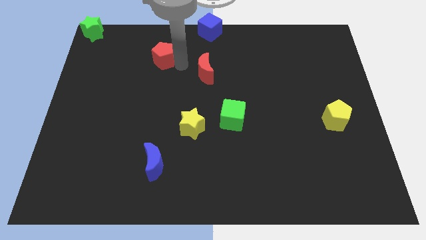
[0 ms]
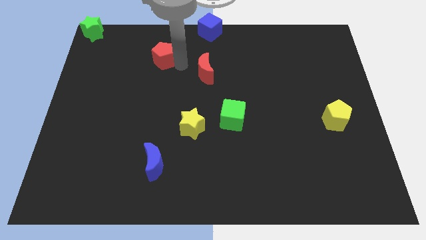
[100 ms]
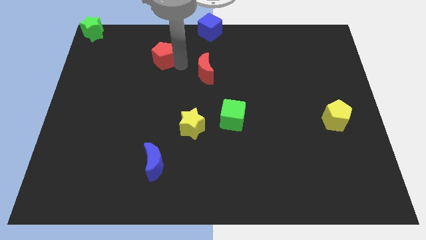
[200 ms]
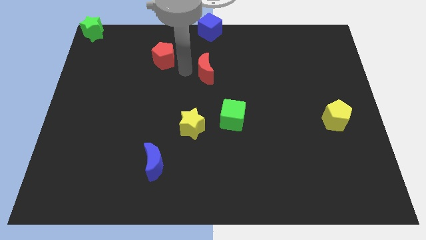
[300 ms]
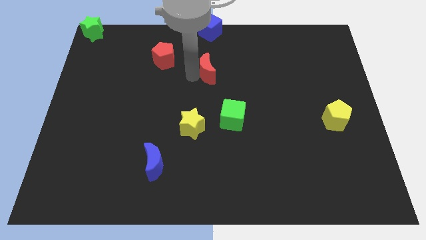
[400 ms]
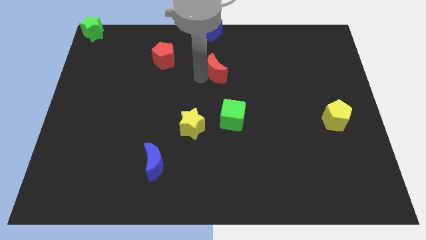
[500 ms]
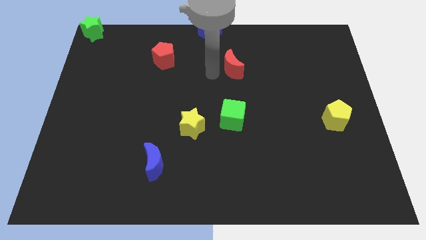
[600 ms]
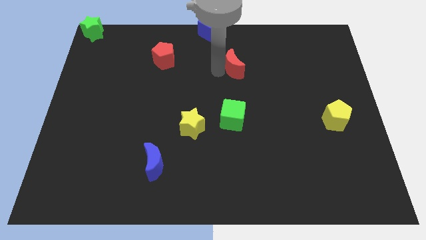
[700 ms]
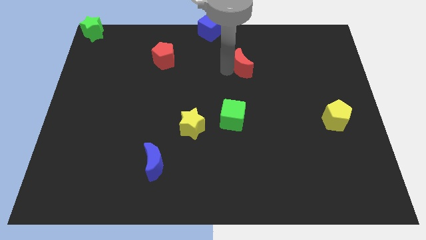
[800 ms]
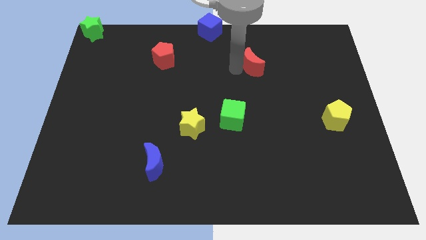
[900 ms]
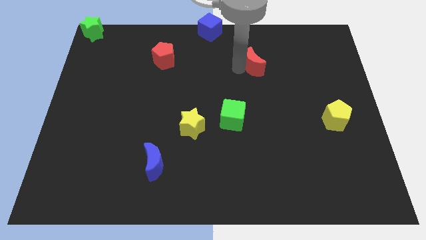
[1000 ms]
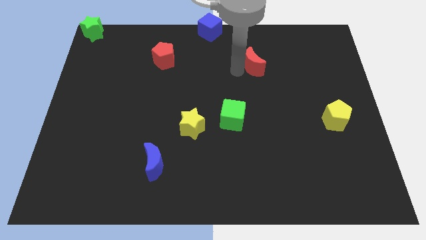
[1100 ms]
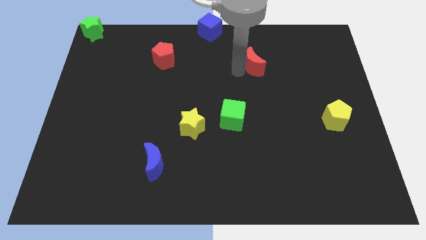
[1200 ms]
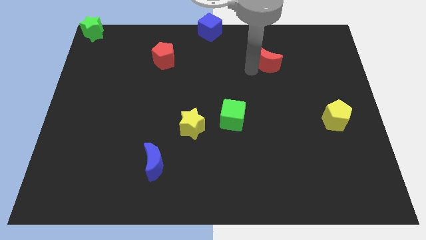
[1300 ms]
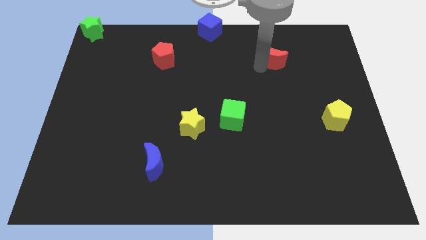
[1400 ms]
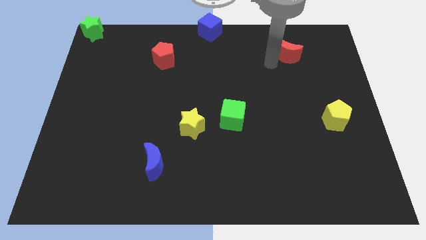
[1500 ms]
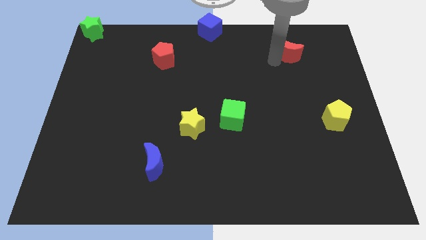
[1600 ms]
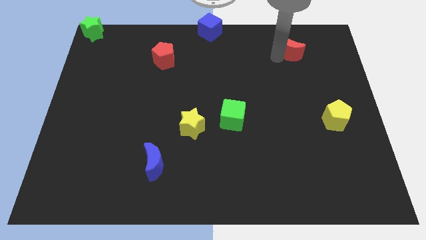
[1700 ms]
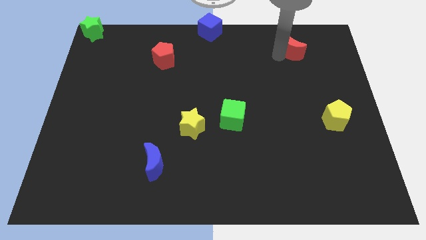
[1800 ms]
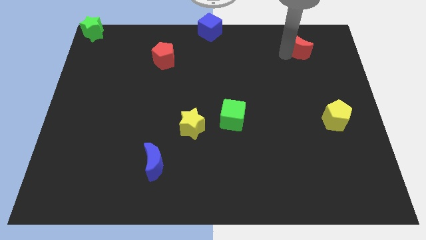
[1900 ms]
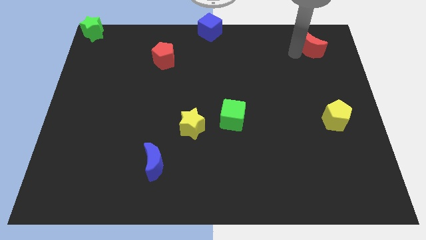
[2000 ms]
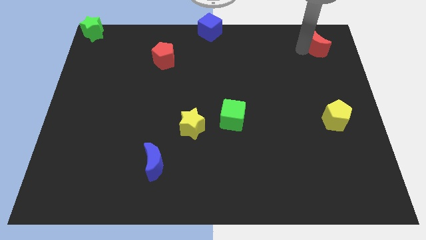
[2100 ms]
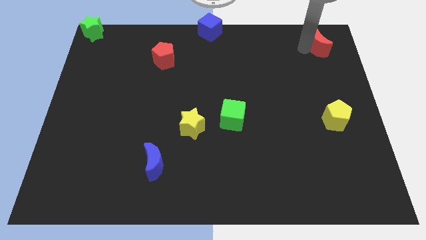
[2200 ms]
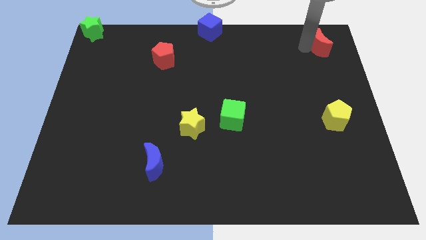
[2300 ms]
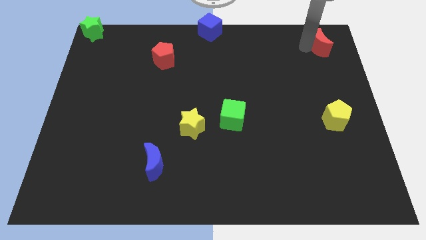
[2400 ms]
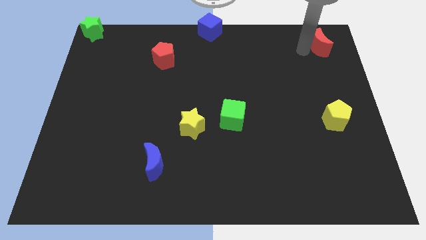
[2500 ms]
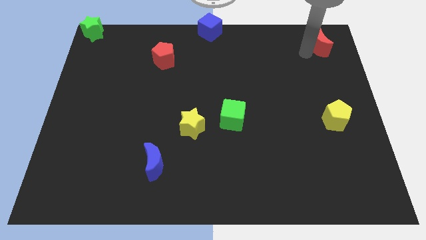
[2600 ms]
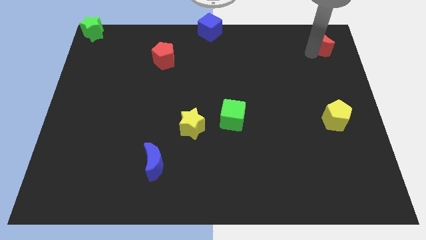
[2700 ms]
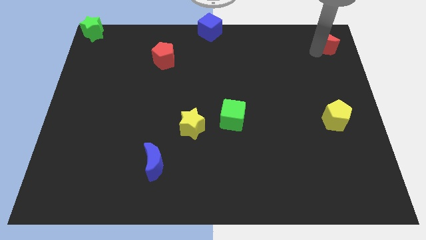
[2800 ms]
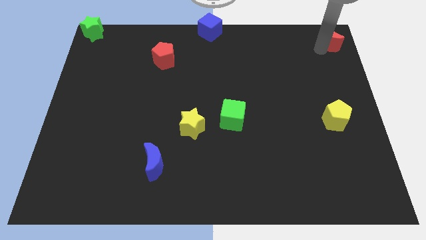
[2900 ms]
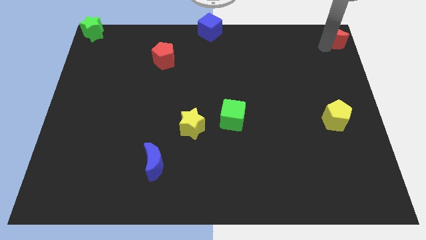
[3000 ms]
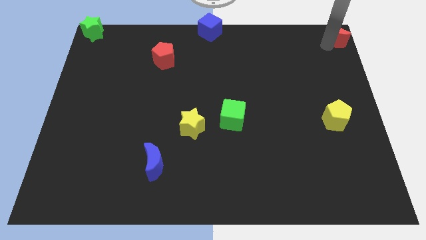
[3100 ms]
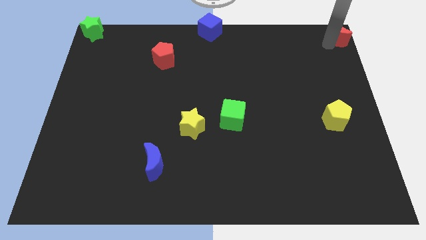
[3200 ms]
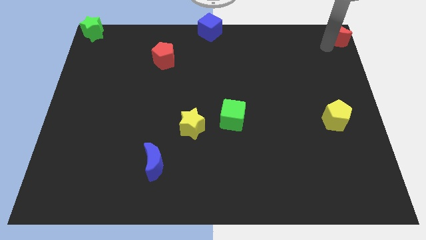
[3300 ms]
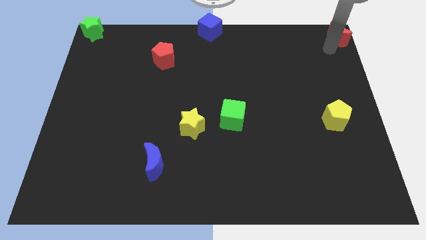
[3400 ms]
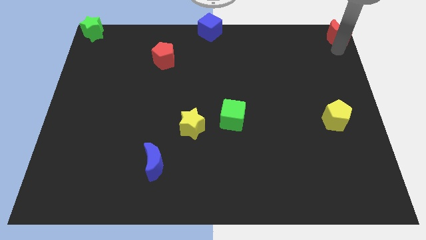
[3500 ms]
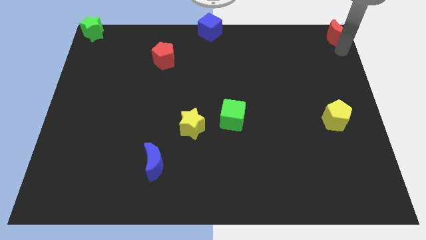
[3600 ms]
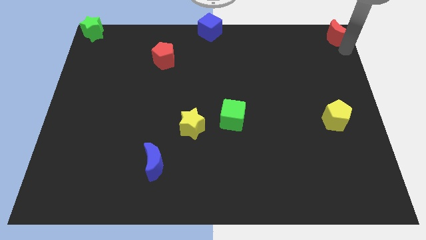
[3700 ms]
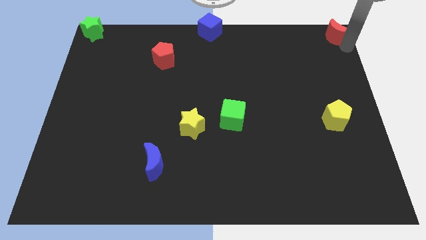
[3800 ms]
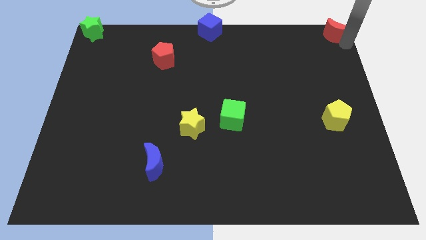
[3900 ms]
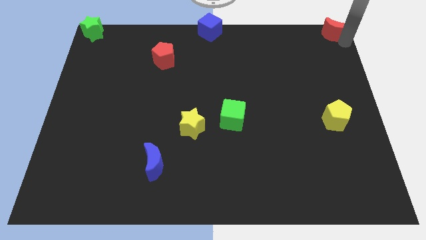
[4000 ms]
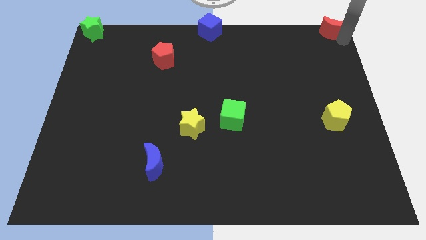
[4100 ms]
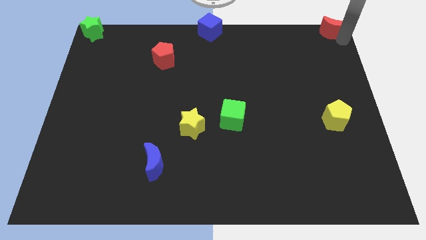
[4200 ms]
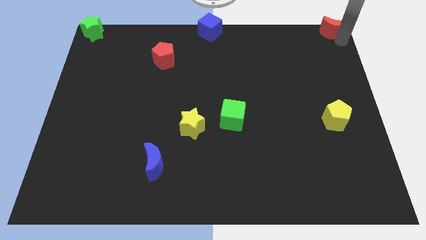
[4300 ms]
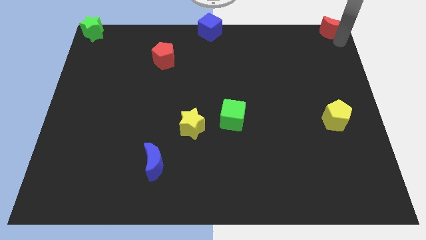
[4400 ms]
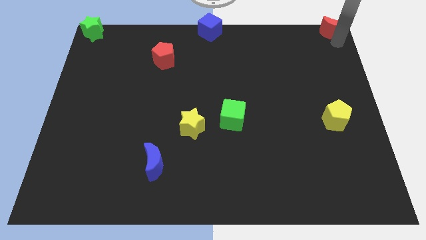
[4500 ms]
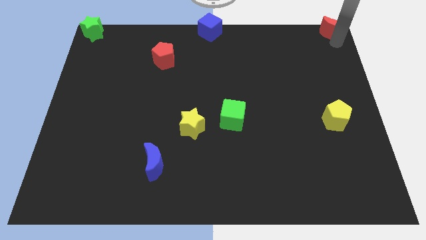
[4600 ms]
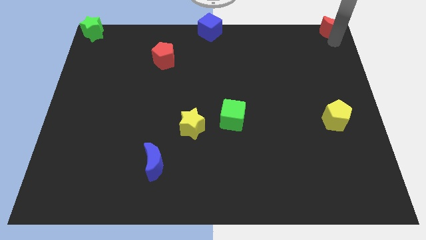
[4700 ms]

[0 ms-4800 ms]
push the red moon to the top right corner

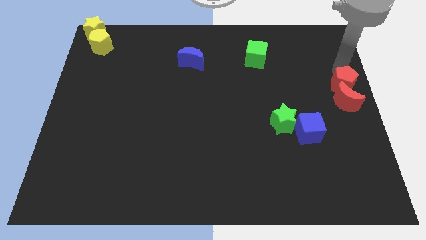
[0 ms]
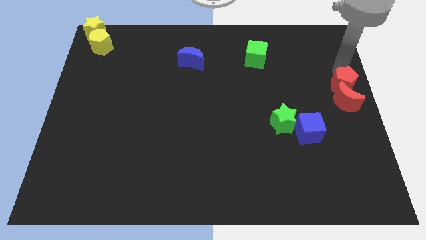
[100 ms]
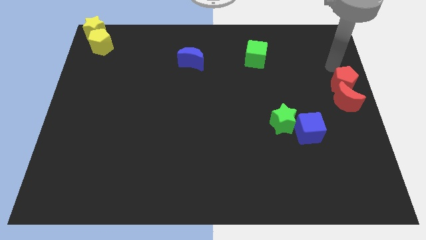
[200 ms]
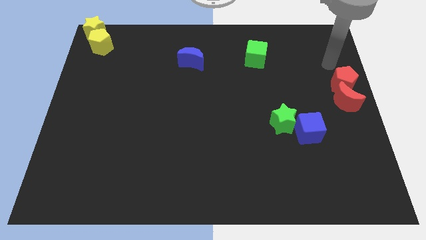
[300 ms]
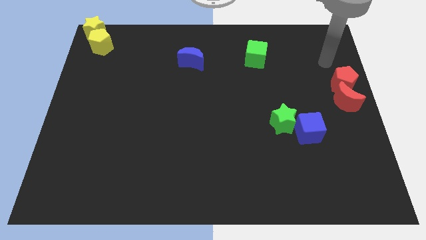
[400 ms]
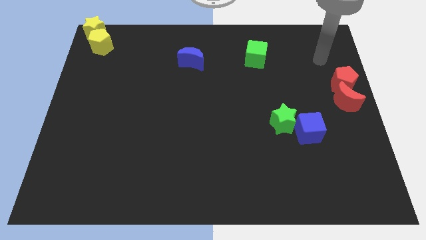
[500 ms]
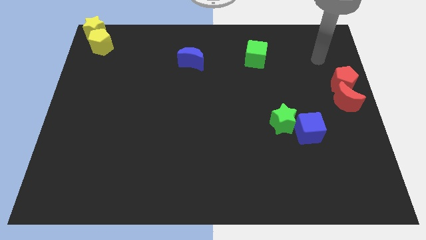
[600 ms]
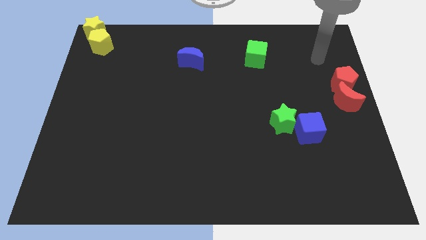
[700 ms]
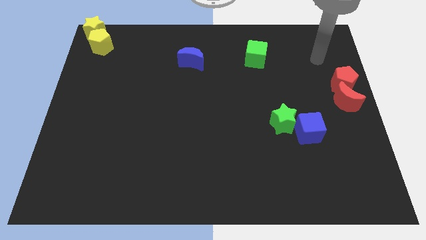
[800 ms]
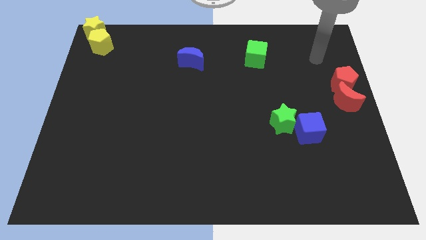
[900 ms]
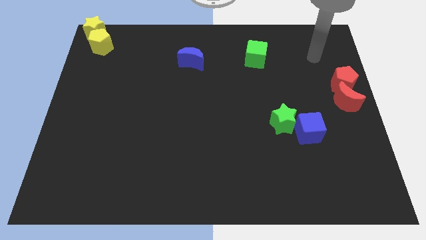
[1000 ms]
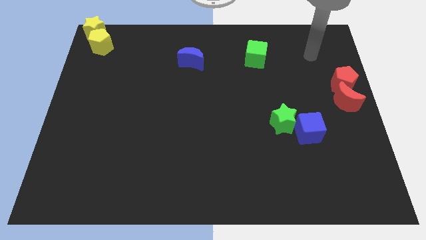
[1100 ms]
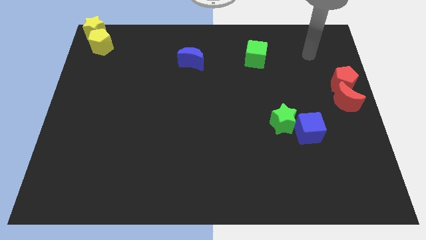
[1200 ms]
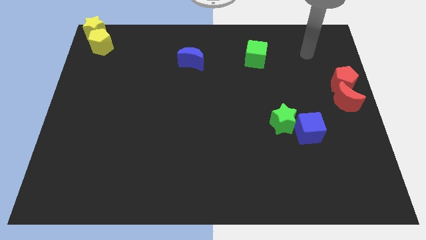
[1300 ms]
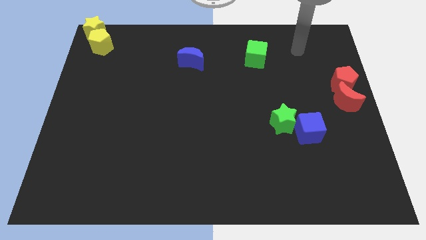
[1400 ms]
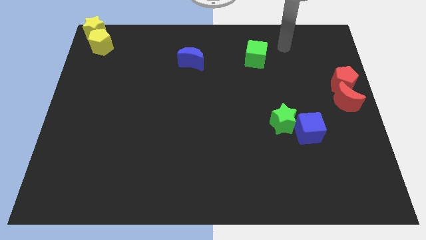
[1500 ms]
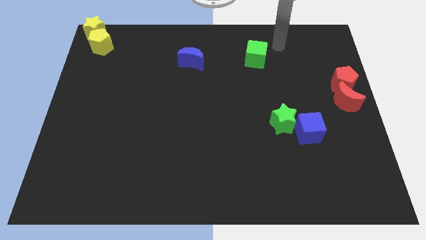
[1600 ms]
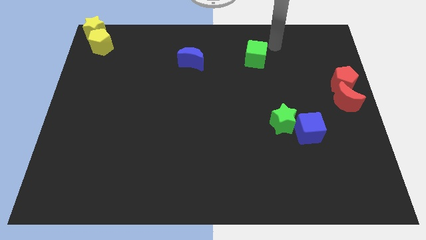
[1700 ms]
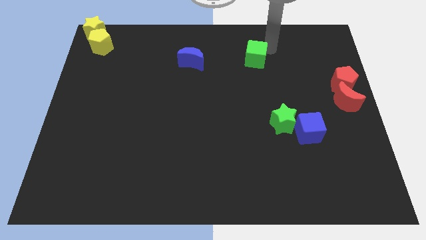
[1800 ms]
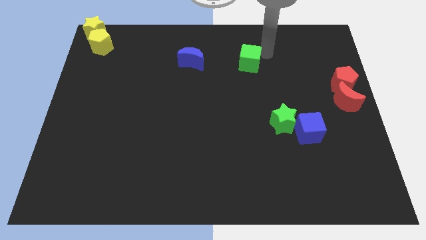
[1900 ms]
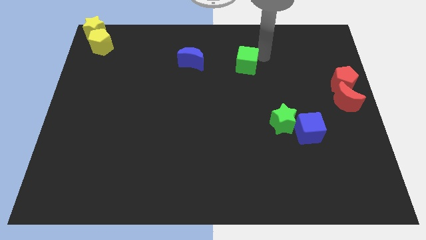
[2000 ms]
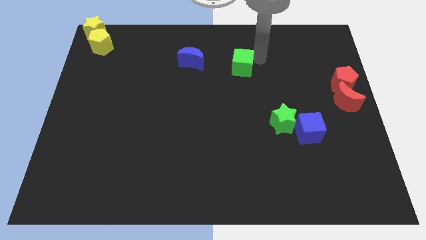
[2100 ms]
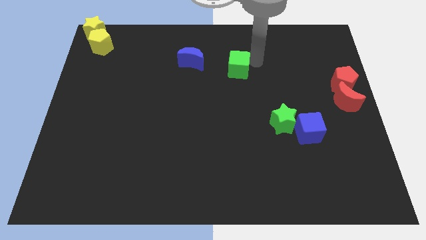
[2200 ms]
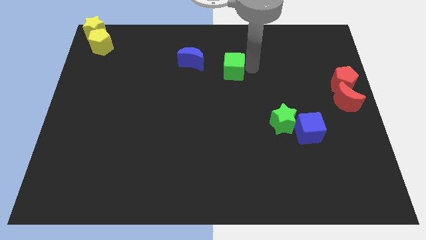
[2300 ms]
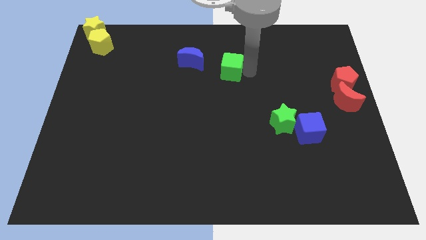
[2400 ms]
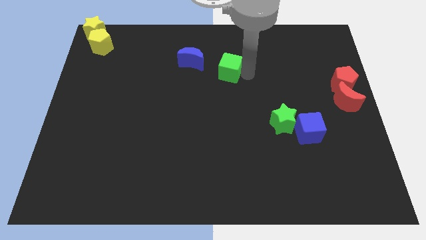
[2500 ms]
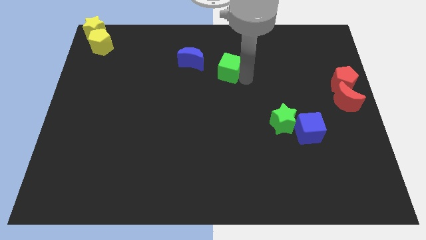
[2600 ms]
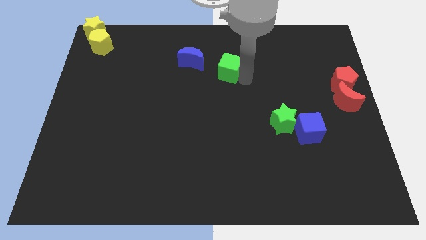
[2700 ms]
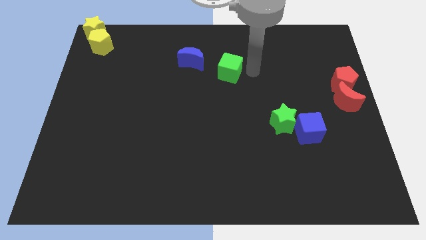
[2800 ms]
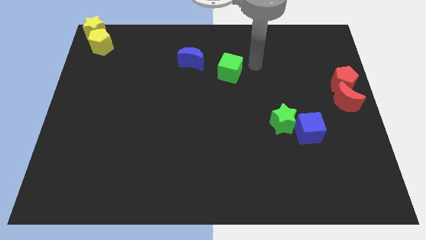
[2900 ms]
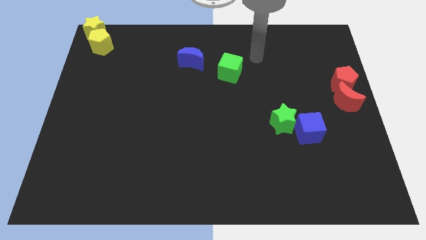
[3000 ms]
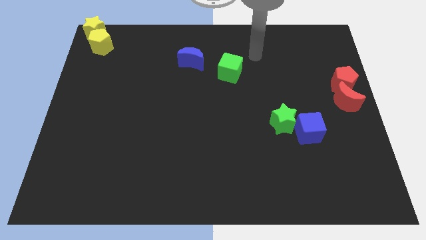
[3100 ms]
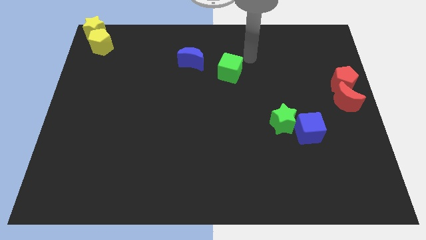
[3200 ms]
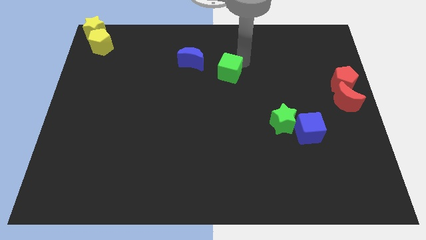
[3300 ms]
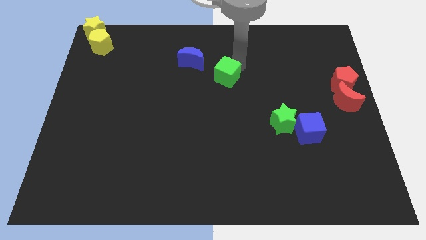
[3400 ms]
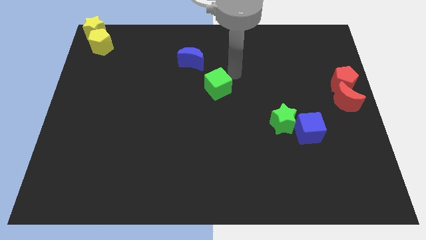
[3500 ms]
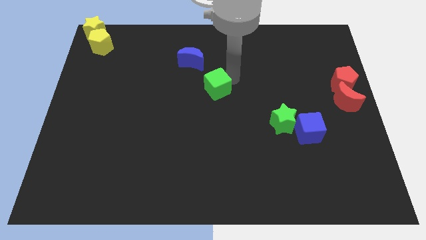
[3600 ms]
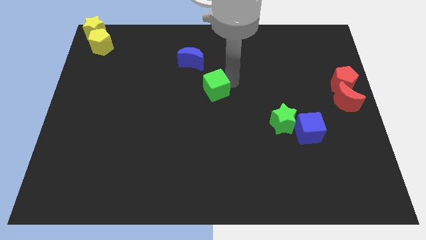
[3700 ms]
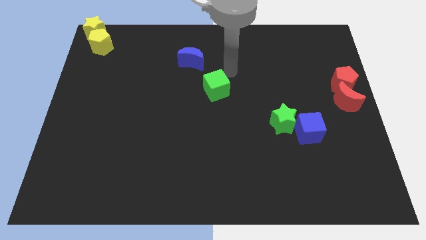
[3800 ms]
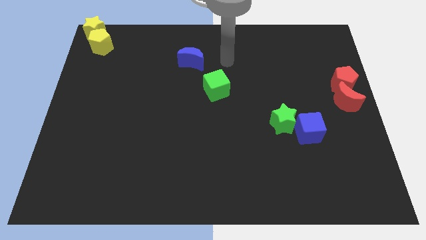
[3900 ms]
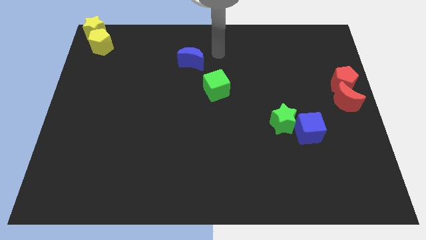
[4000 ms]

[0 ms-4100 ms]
place the green cube diagonally top left to green star
